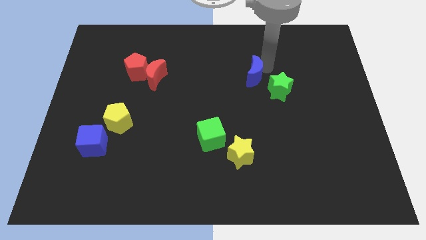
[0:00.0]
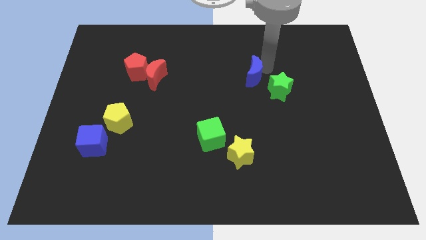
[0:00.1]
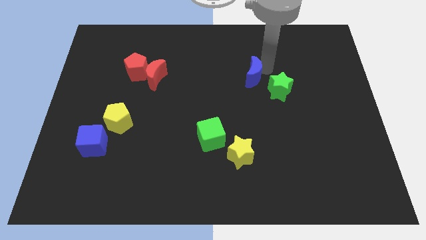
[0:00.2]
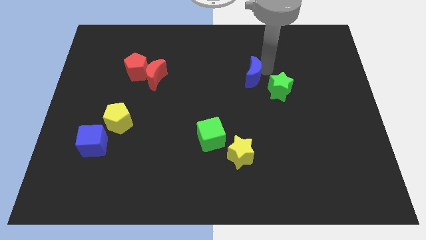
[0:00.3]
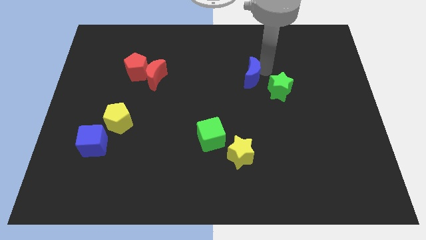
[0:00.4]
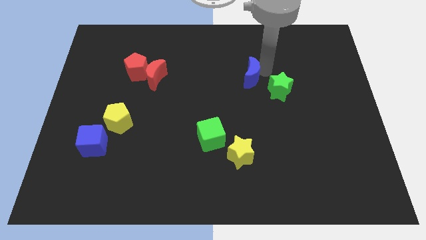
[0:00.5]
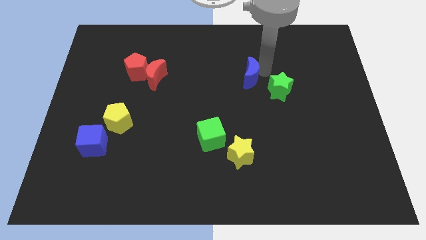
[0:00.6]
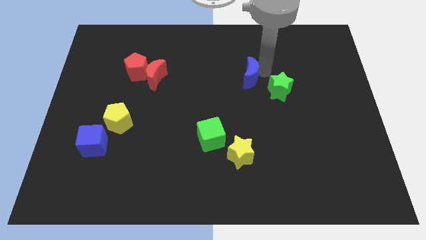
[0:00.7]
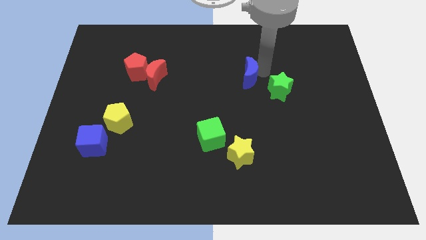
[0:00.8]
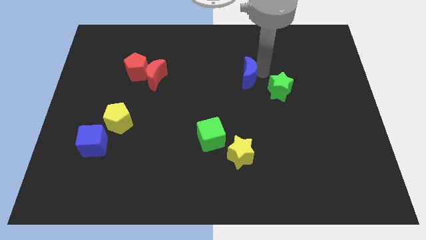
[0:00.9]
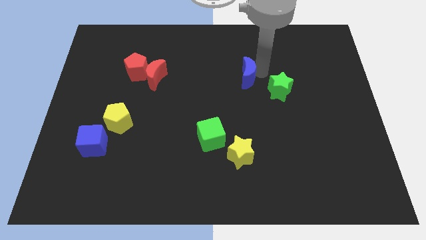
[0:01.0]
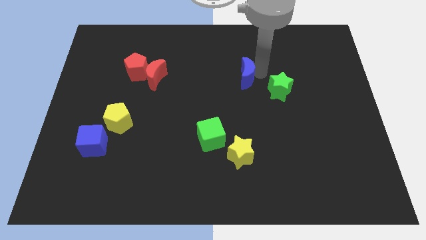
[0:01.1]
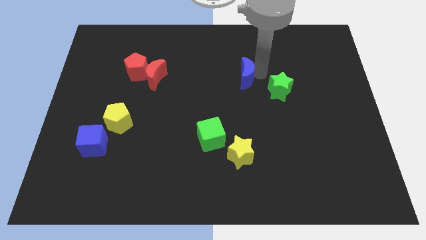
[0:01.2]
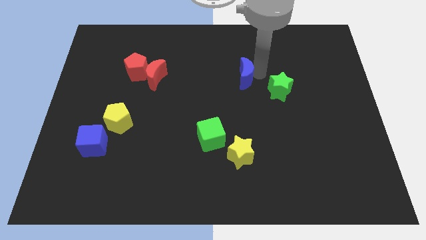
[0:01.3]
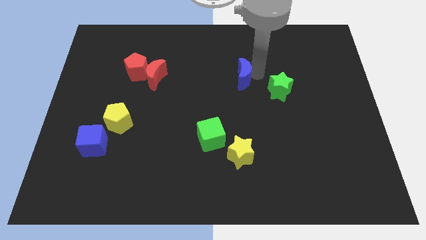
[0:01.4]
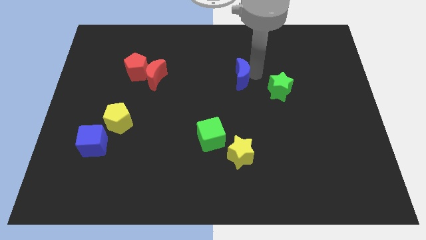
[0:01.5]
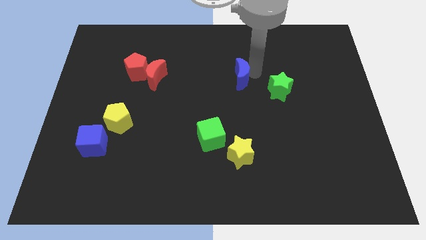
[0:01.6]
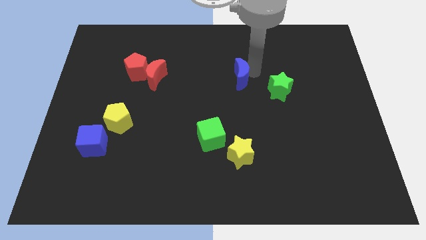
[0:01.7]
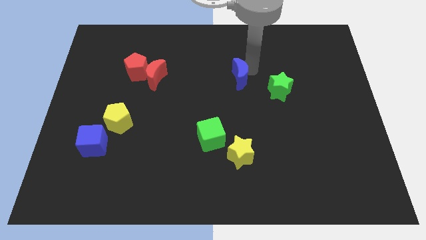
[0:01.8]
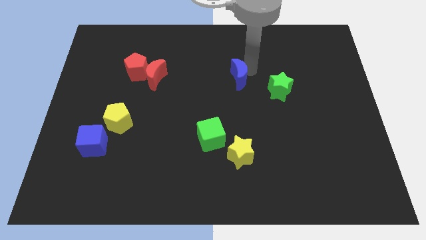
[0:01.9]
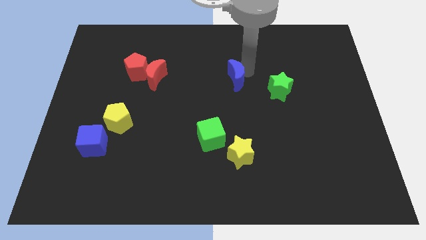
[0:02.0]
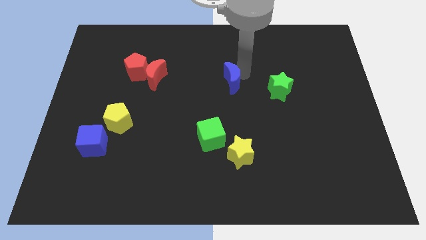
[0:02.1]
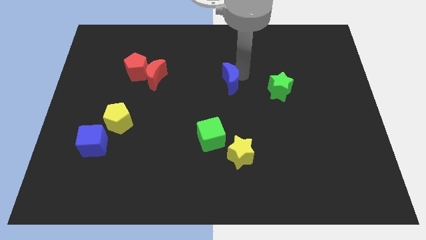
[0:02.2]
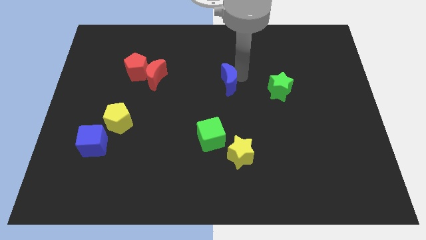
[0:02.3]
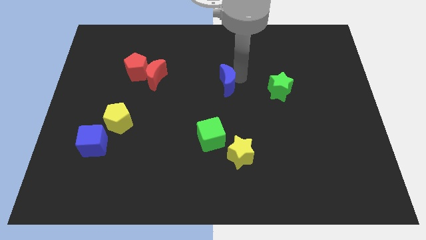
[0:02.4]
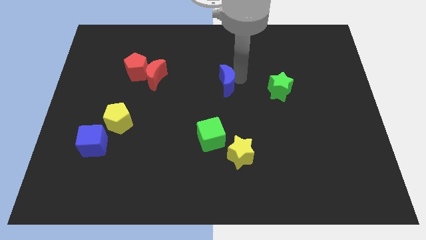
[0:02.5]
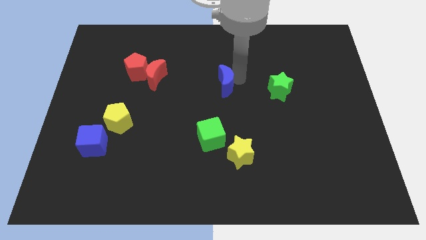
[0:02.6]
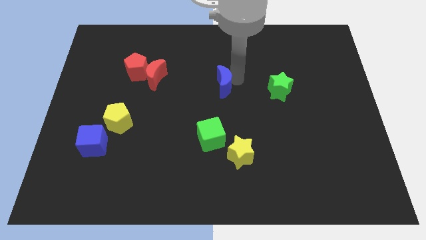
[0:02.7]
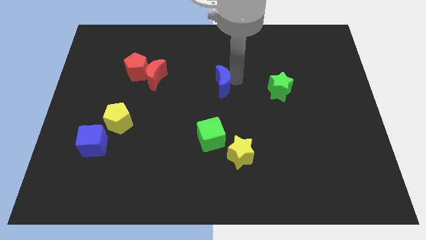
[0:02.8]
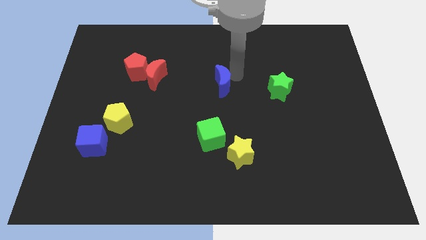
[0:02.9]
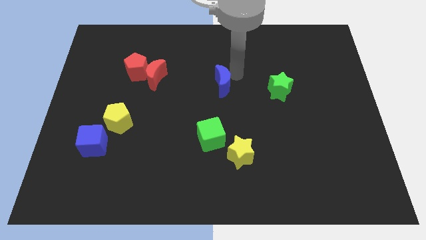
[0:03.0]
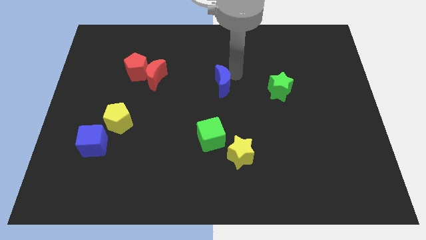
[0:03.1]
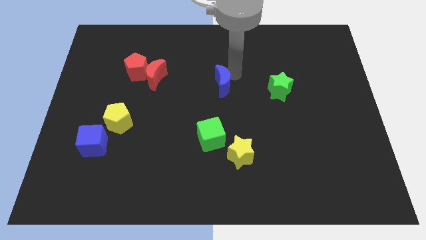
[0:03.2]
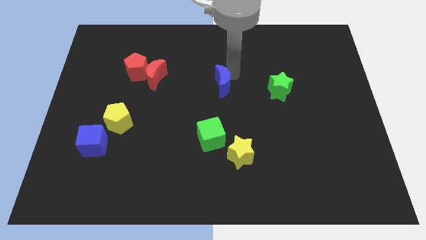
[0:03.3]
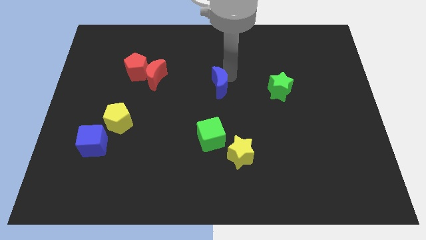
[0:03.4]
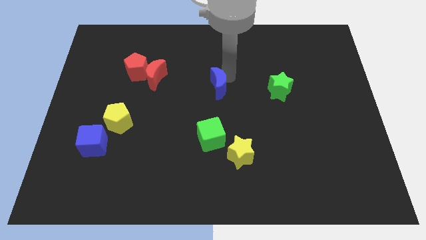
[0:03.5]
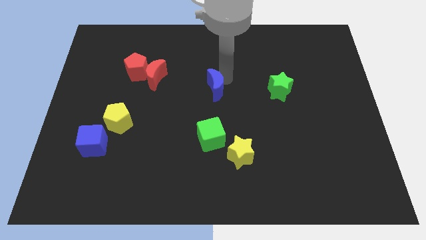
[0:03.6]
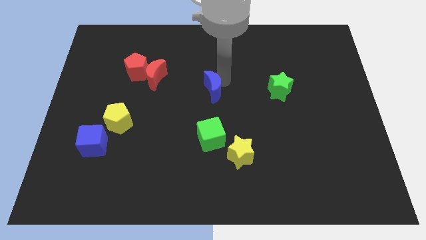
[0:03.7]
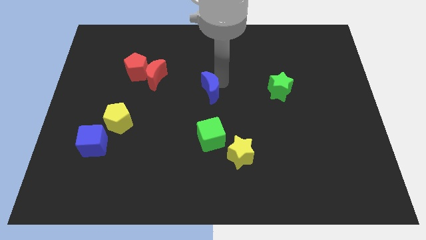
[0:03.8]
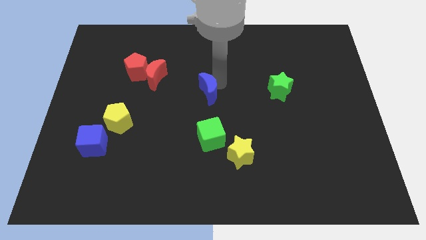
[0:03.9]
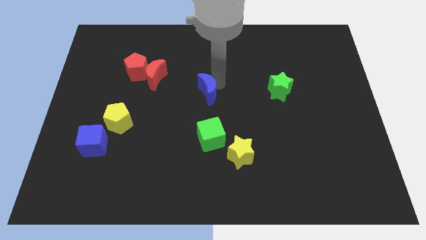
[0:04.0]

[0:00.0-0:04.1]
move blue crescent to the center

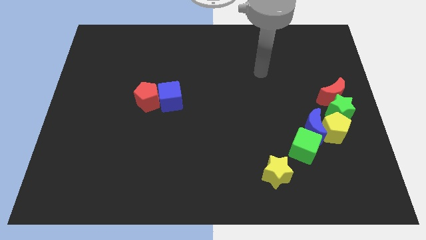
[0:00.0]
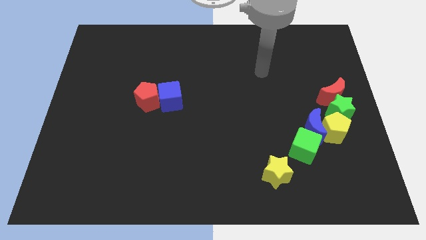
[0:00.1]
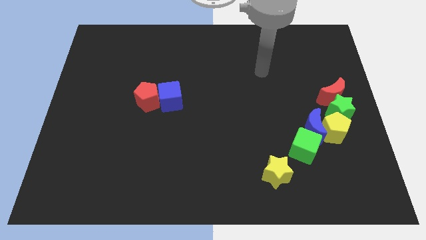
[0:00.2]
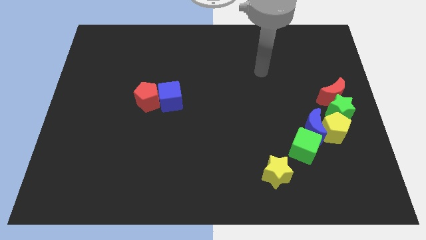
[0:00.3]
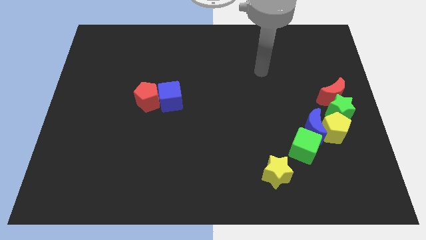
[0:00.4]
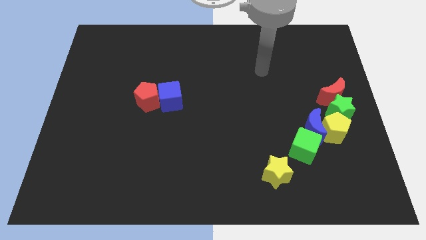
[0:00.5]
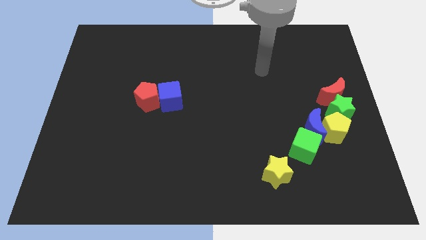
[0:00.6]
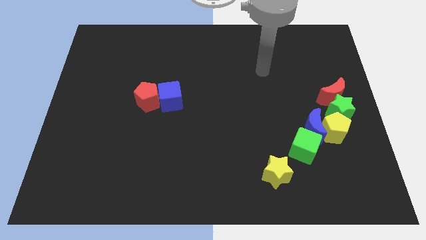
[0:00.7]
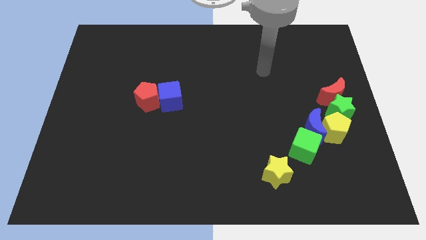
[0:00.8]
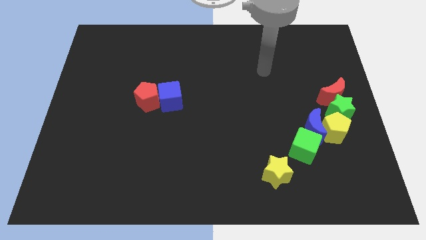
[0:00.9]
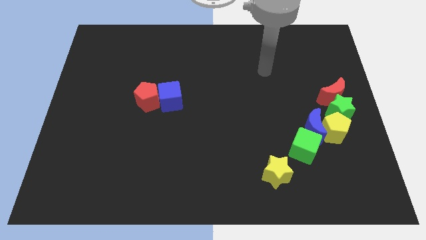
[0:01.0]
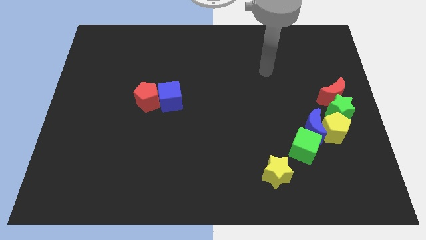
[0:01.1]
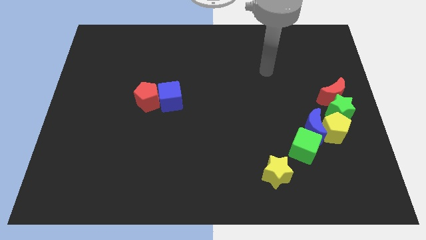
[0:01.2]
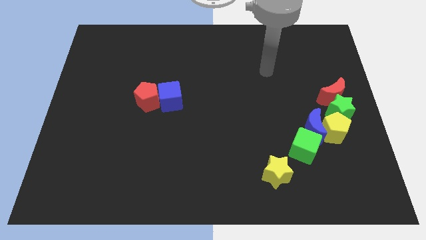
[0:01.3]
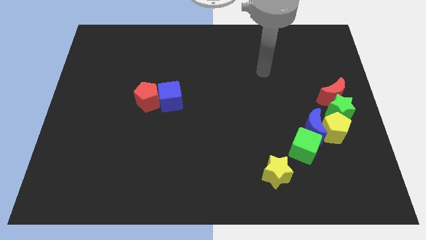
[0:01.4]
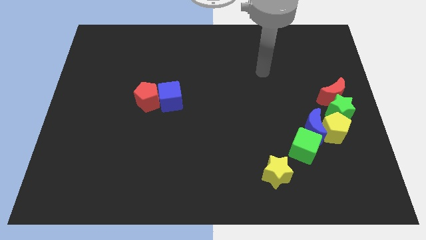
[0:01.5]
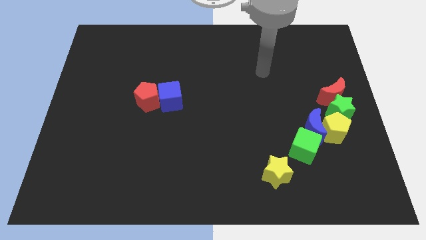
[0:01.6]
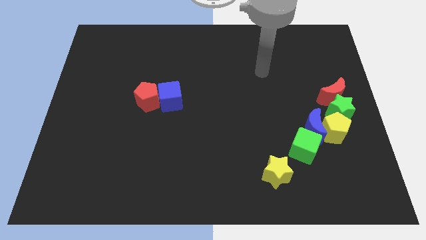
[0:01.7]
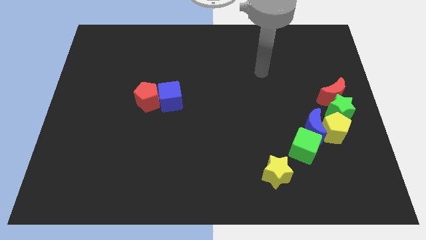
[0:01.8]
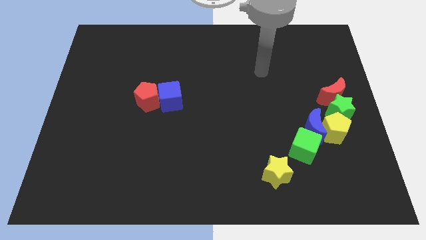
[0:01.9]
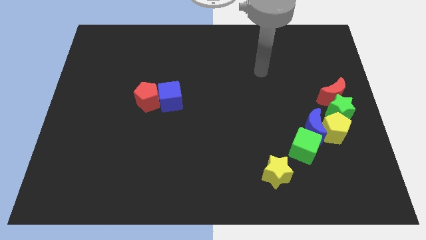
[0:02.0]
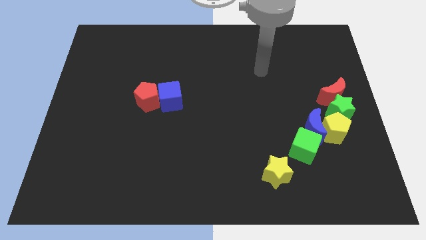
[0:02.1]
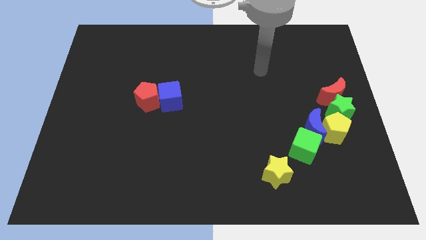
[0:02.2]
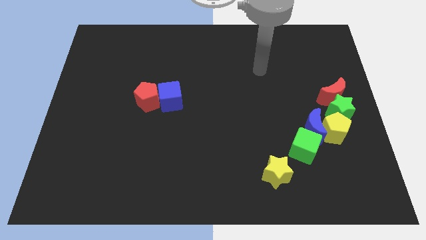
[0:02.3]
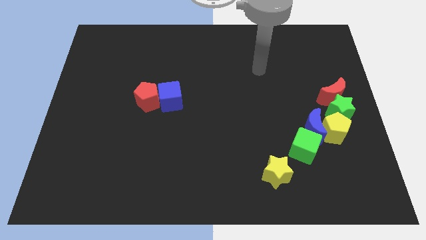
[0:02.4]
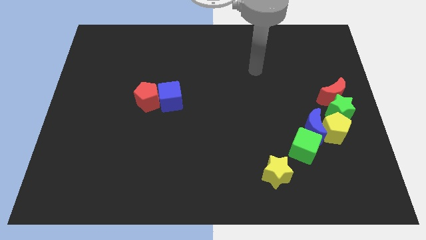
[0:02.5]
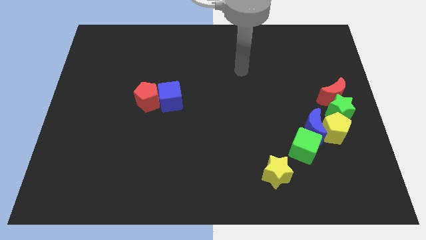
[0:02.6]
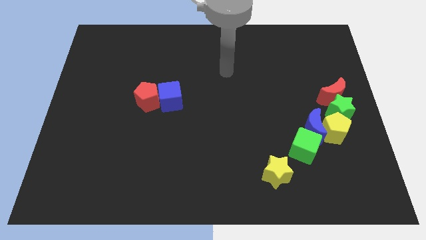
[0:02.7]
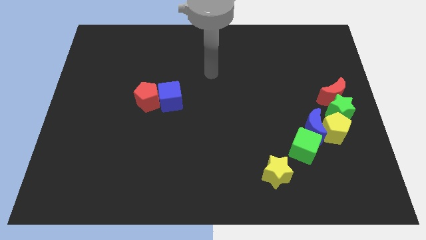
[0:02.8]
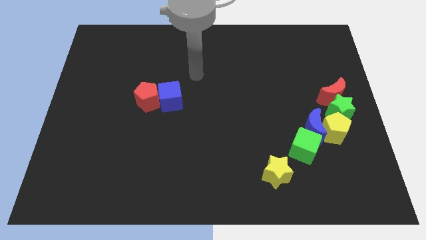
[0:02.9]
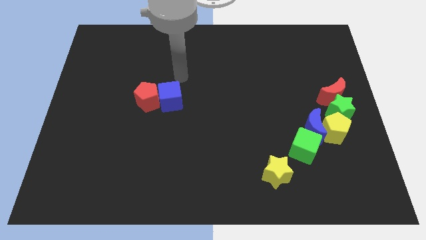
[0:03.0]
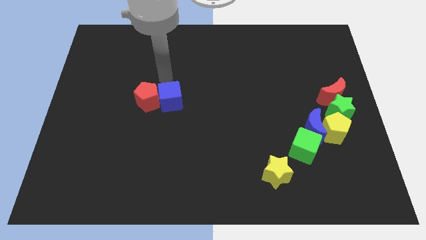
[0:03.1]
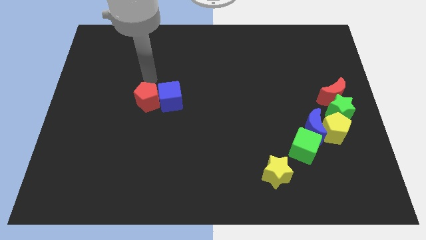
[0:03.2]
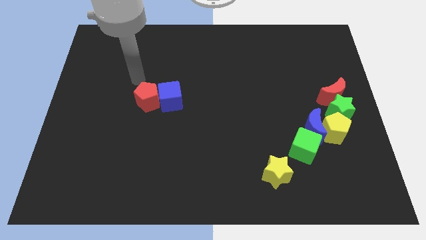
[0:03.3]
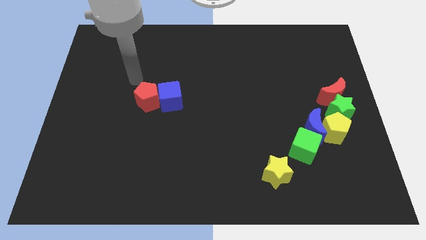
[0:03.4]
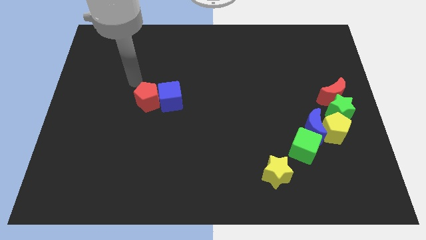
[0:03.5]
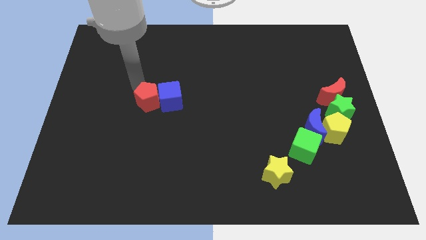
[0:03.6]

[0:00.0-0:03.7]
place your arm to the top left of red pentagon

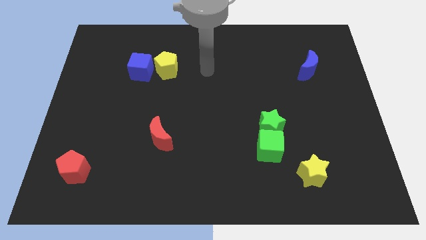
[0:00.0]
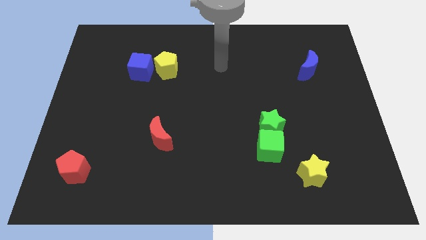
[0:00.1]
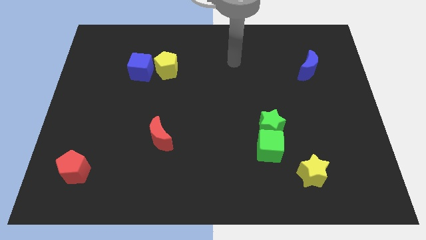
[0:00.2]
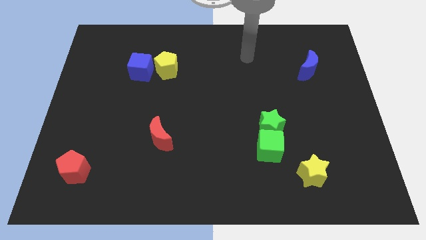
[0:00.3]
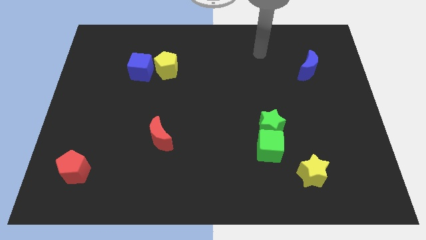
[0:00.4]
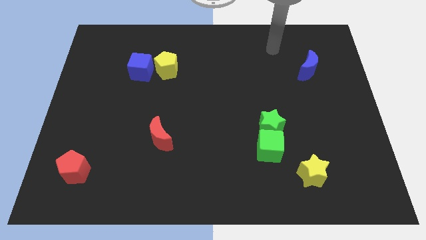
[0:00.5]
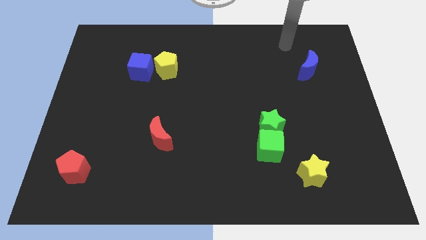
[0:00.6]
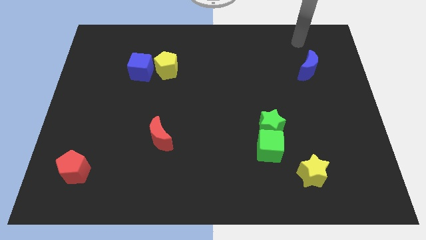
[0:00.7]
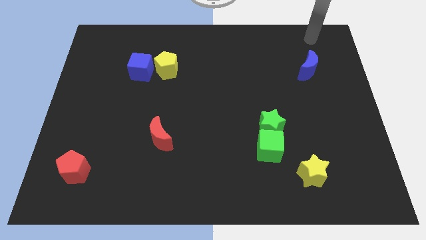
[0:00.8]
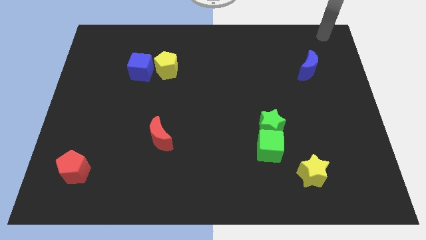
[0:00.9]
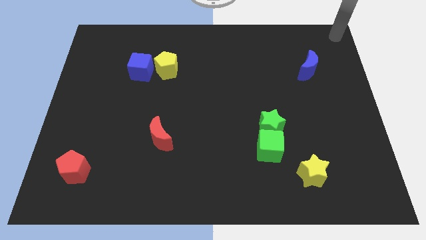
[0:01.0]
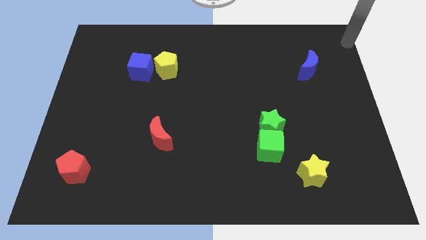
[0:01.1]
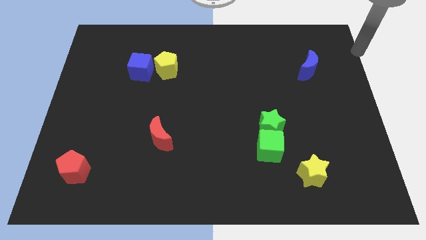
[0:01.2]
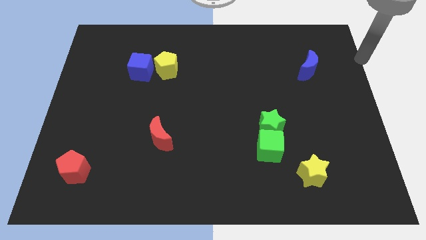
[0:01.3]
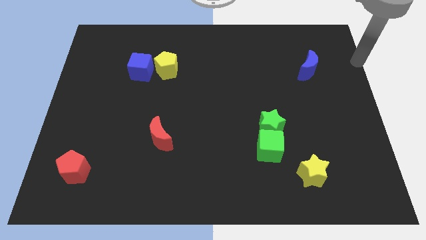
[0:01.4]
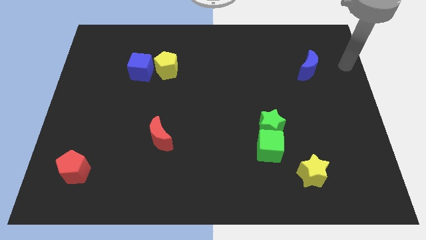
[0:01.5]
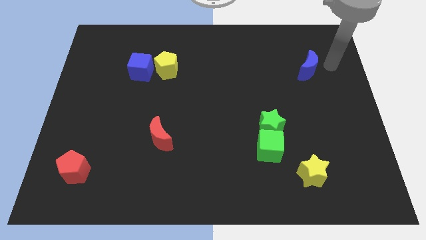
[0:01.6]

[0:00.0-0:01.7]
go and point your hand at the right side of the blue crescent
